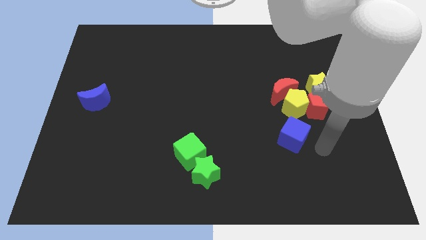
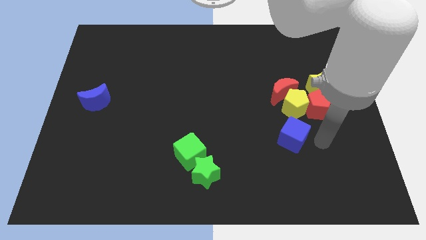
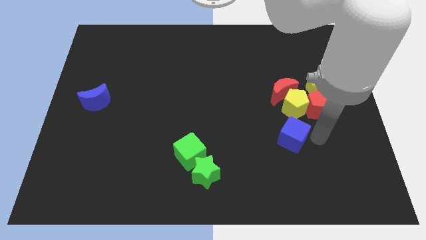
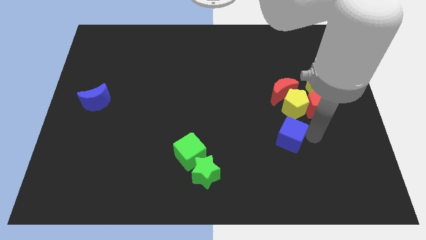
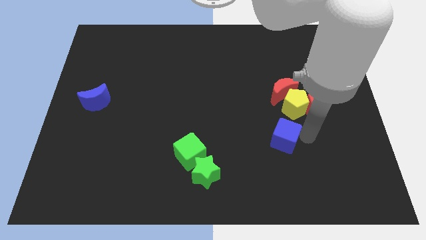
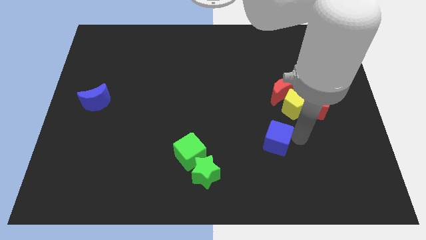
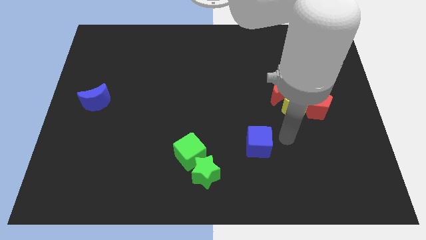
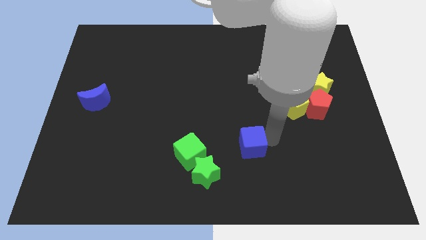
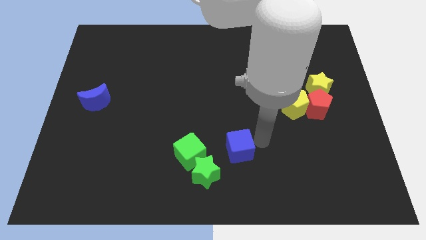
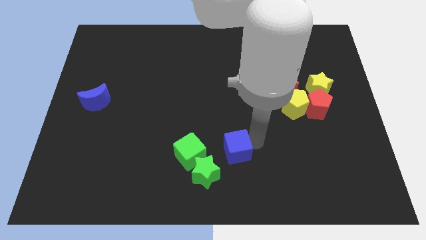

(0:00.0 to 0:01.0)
separate blue cube and the yellow pentagon

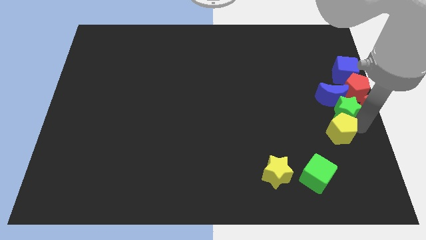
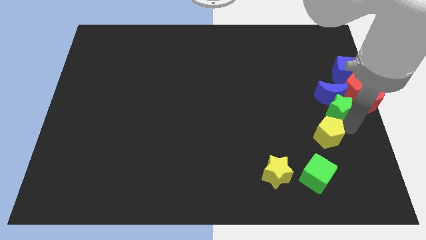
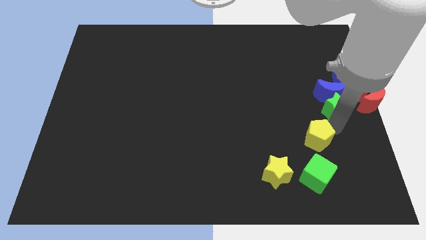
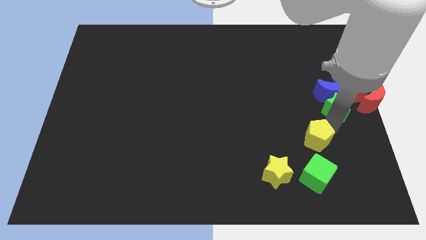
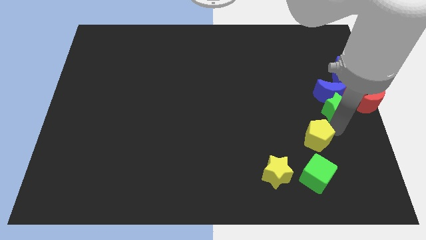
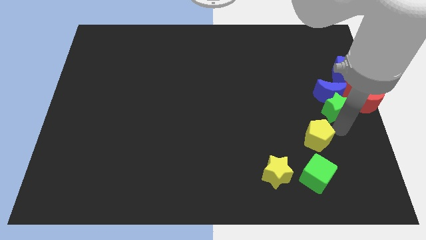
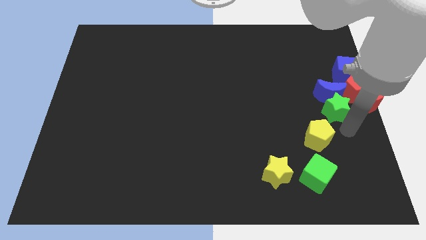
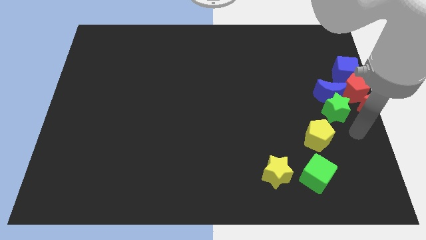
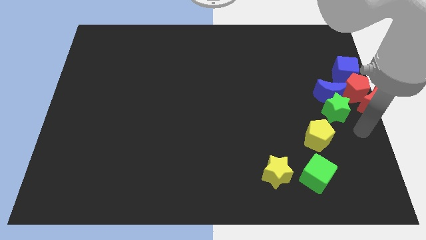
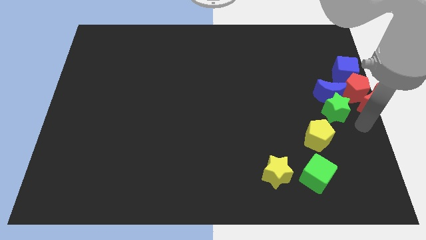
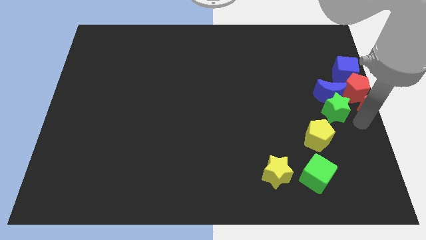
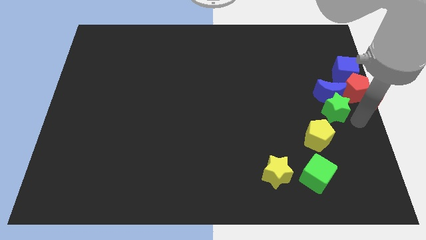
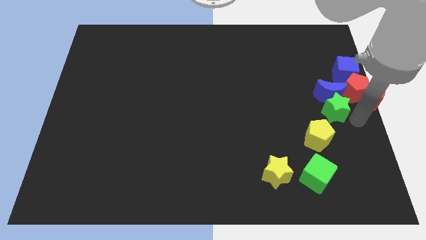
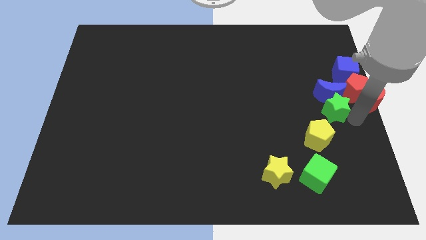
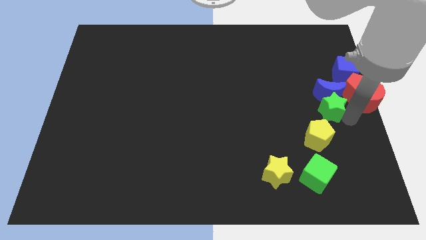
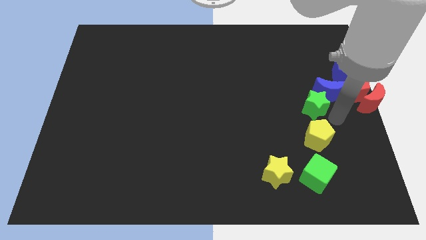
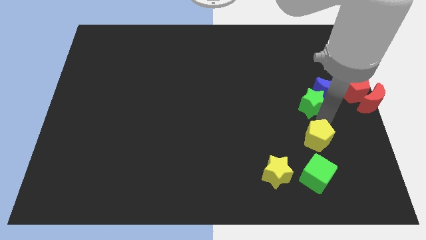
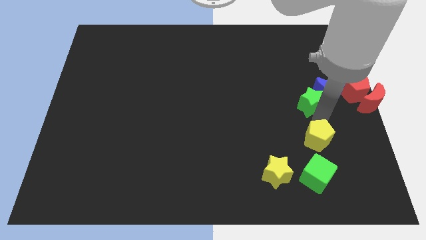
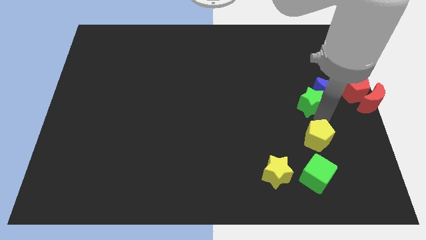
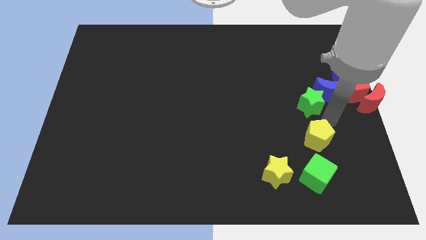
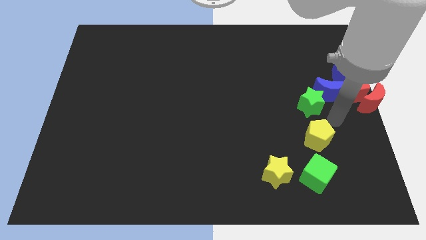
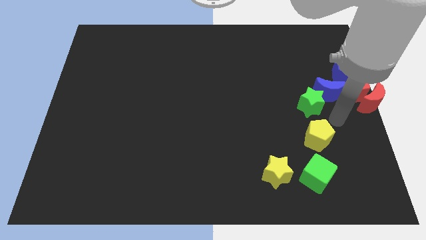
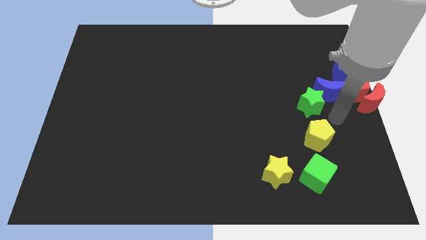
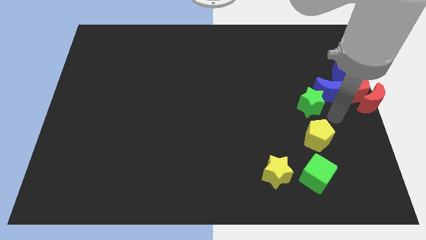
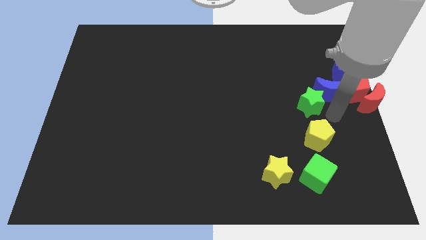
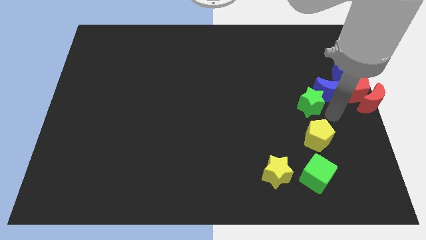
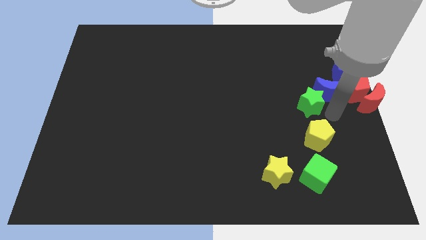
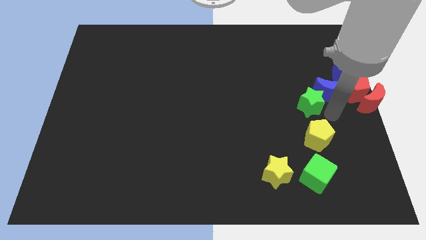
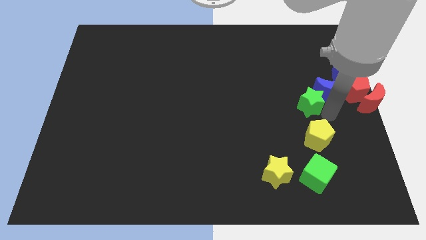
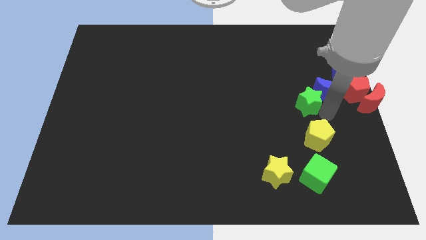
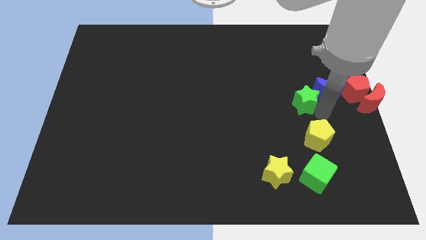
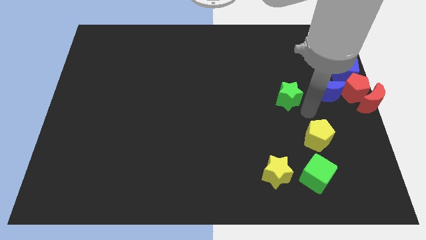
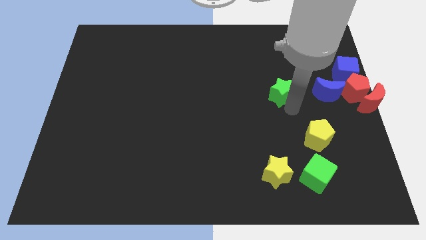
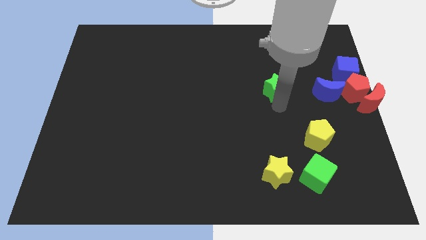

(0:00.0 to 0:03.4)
separate green star from blue moon

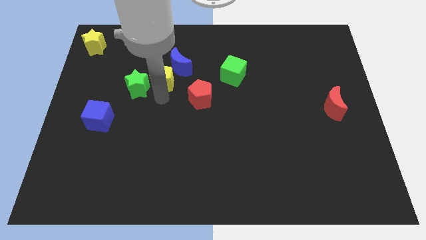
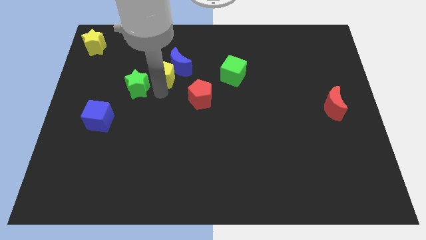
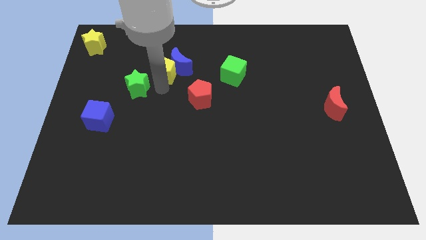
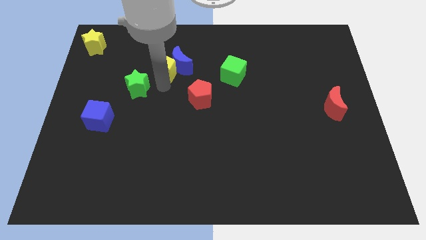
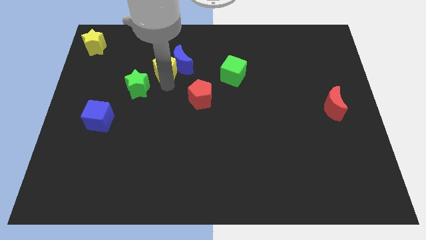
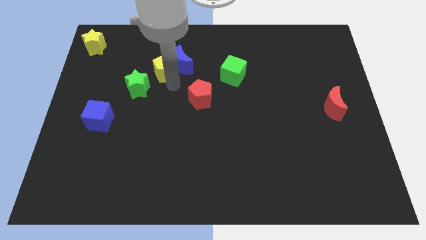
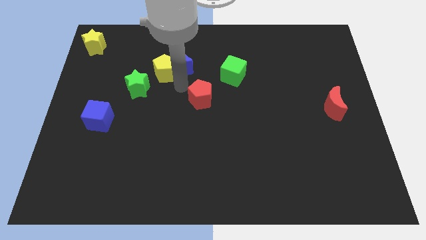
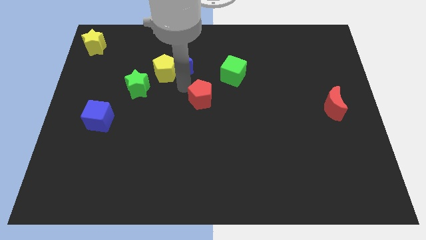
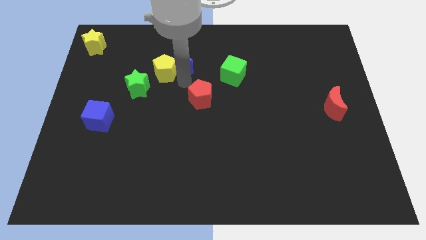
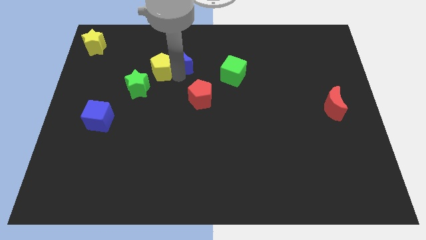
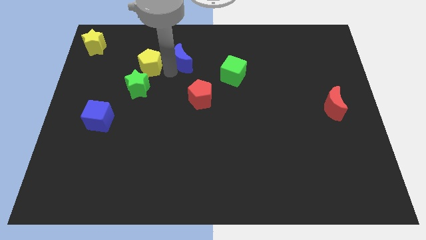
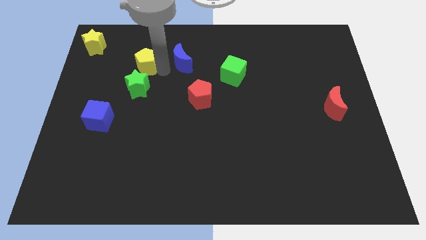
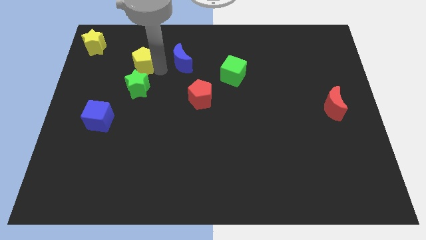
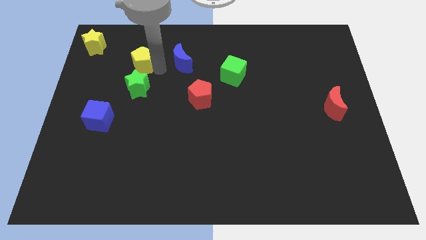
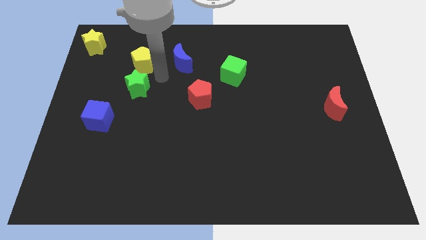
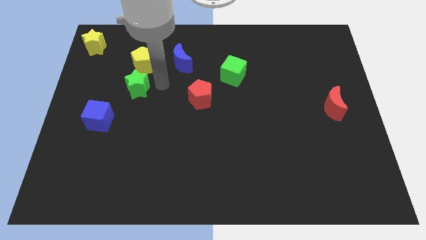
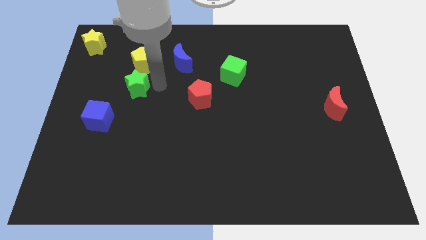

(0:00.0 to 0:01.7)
move the yellow pentagon vertically to the top of the green star

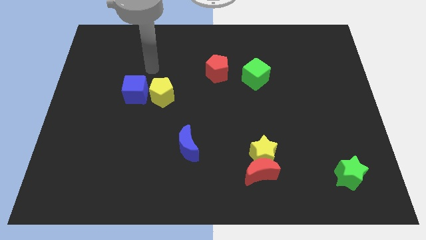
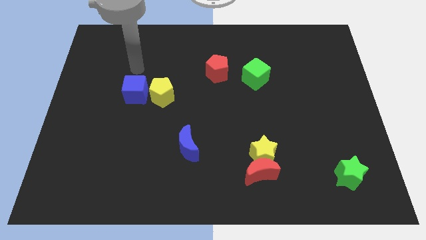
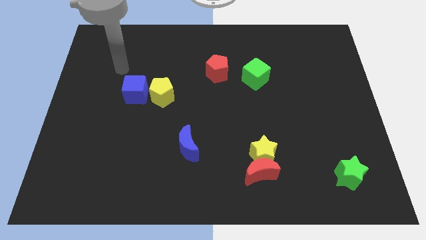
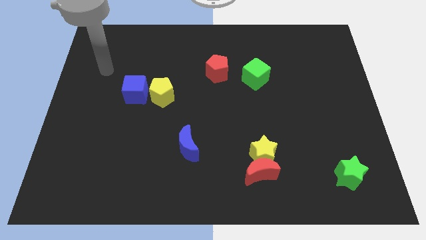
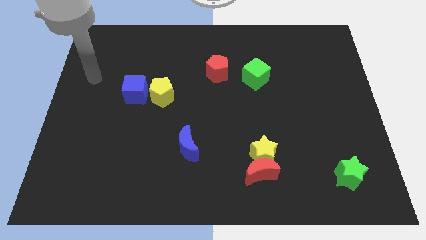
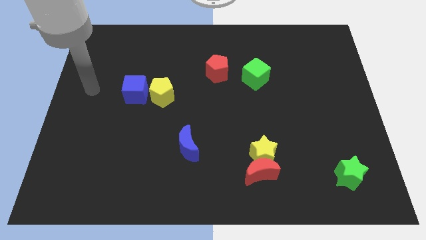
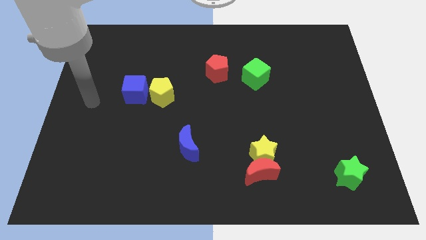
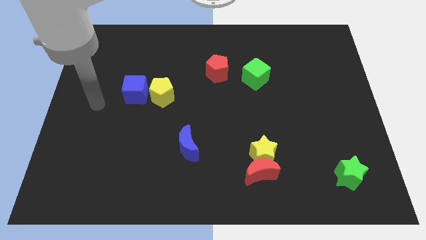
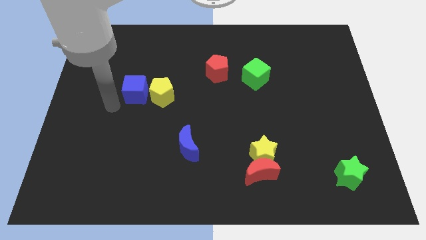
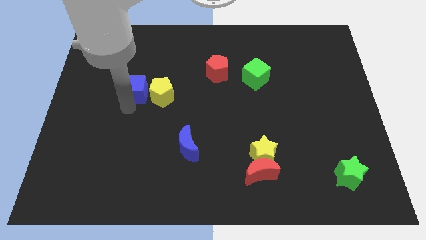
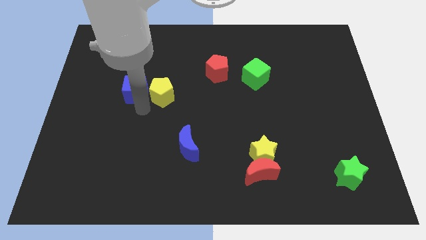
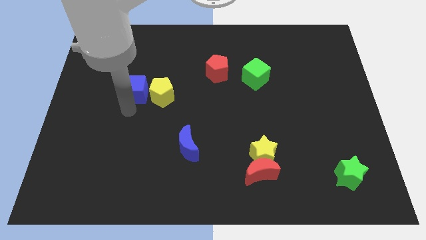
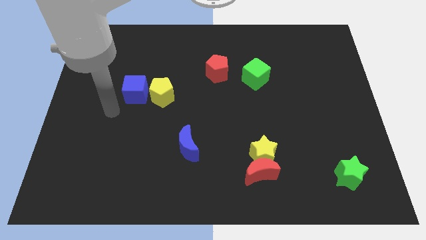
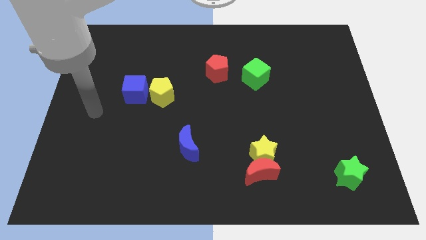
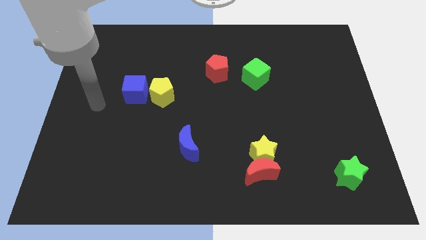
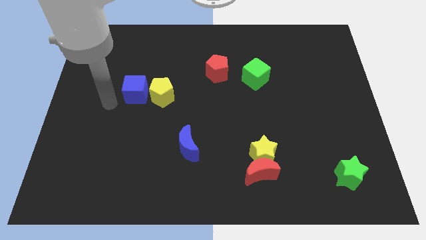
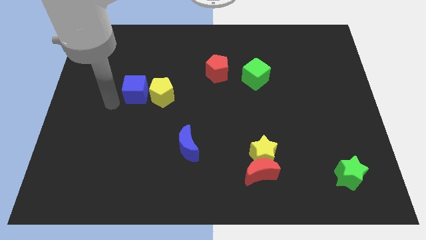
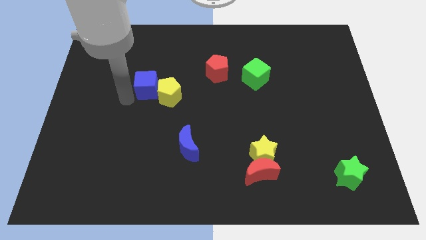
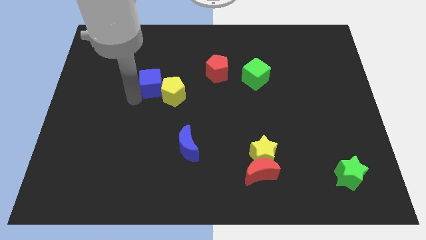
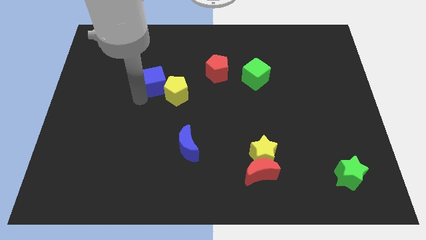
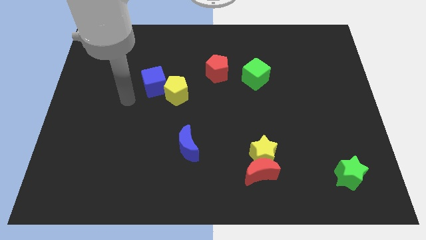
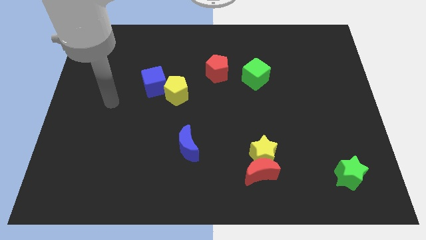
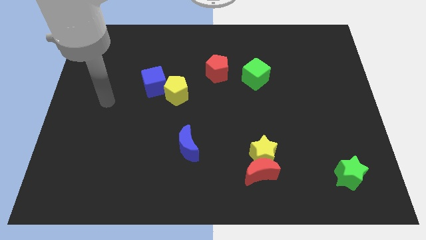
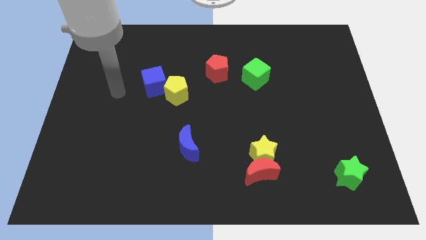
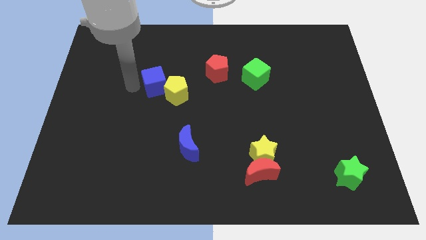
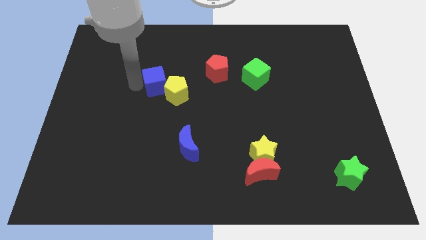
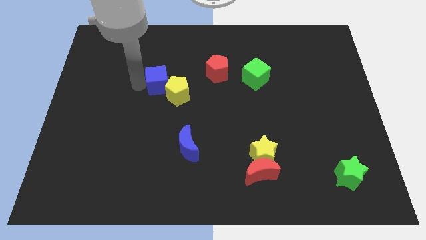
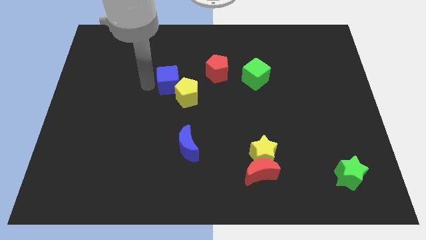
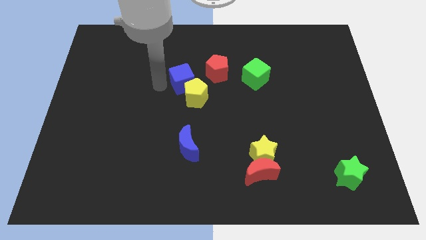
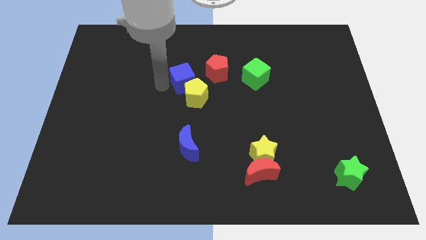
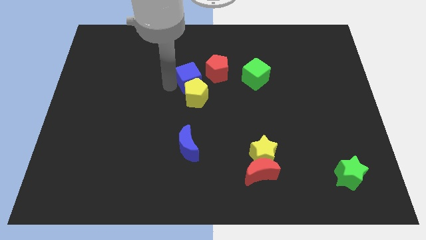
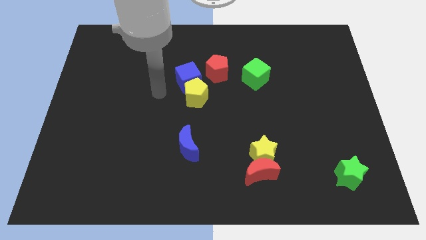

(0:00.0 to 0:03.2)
push the blue cube along with the yellow pentagon into the center of the board
